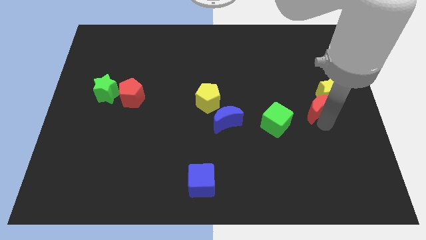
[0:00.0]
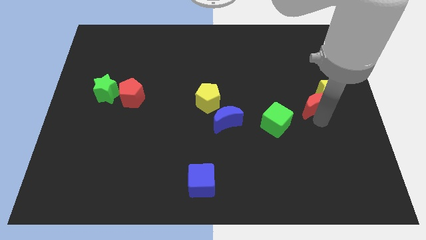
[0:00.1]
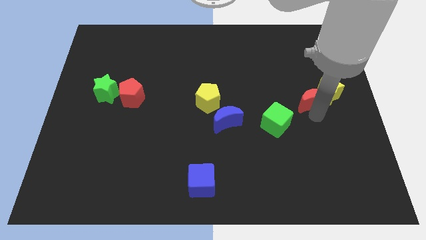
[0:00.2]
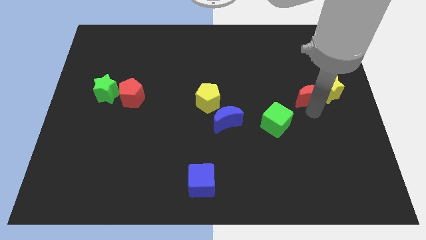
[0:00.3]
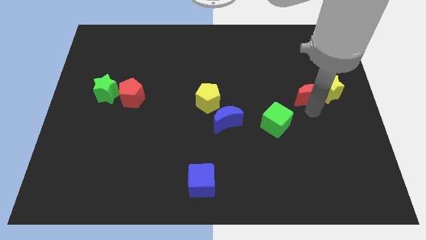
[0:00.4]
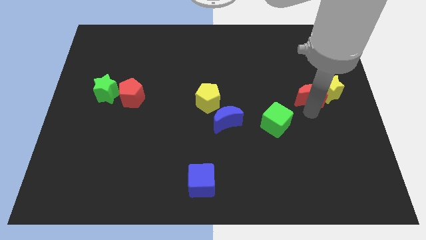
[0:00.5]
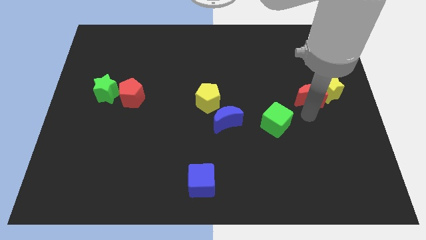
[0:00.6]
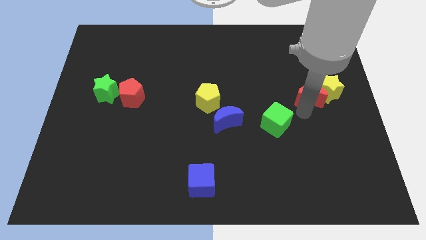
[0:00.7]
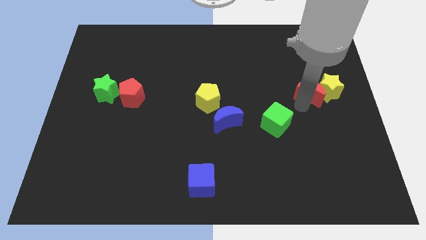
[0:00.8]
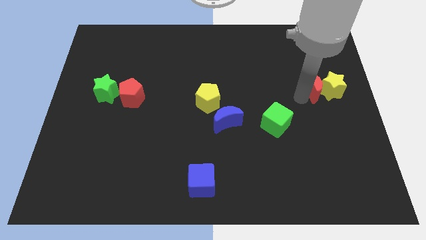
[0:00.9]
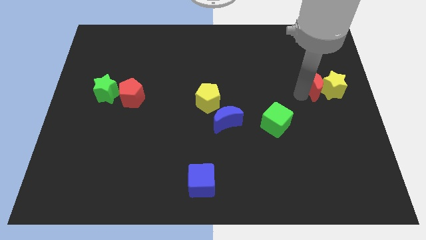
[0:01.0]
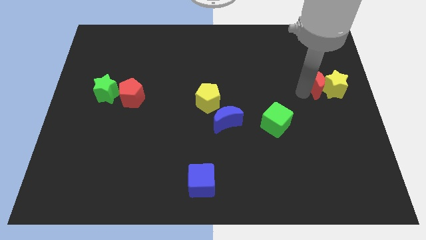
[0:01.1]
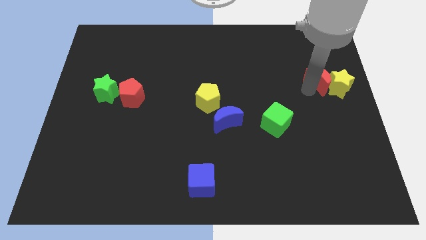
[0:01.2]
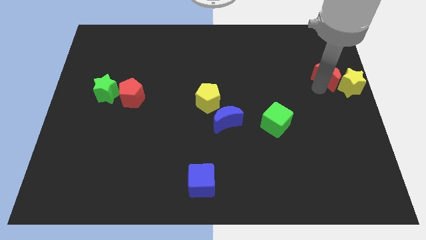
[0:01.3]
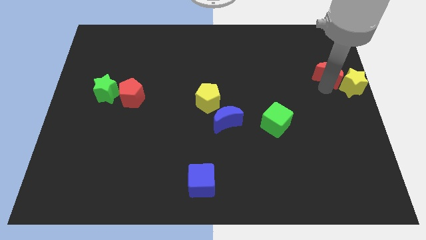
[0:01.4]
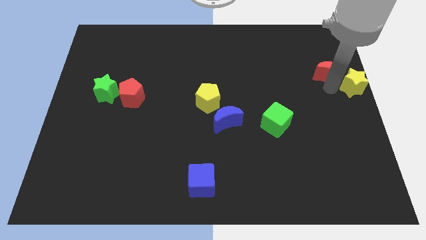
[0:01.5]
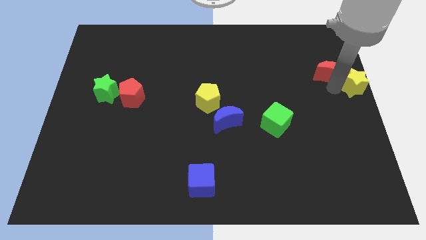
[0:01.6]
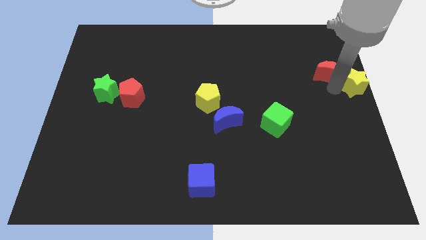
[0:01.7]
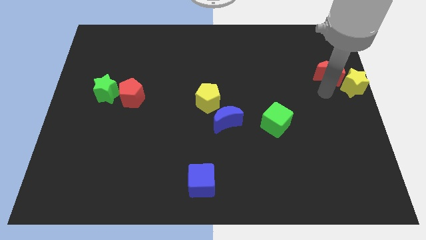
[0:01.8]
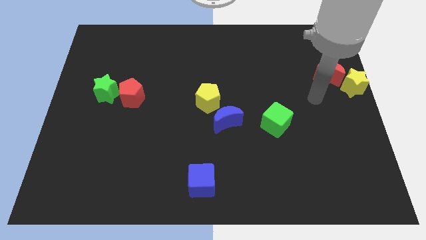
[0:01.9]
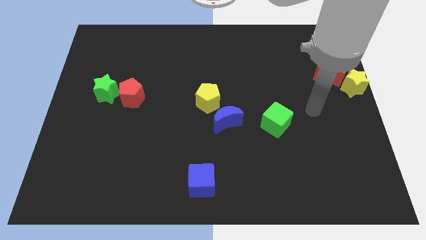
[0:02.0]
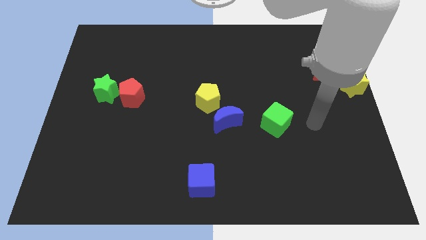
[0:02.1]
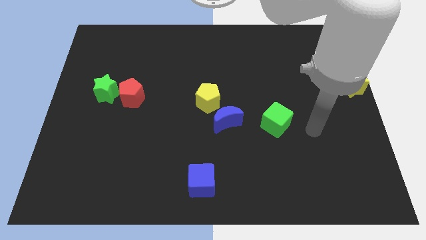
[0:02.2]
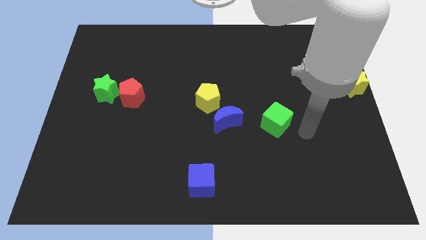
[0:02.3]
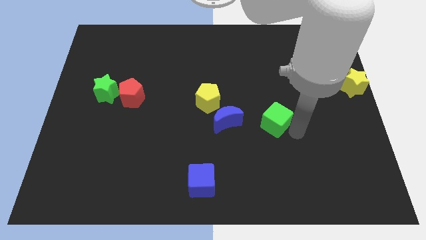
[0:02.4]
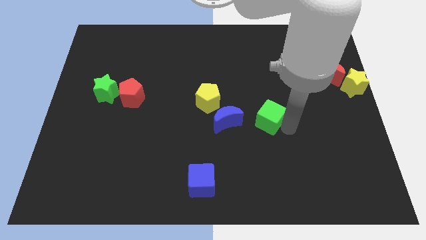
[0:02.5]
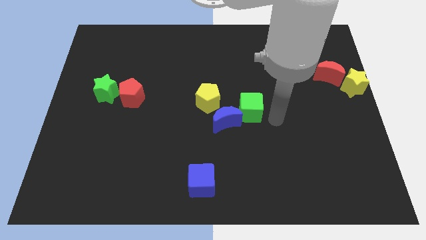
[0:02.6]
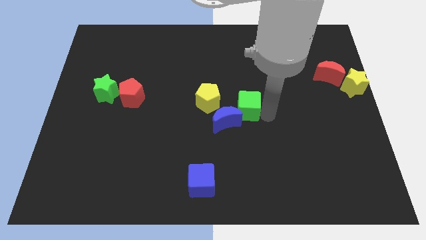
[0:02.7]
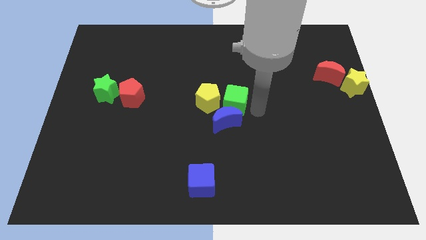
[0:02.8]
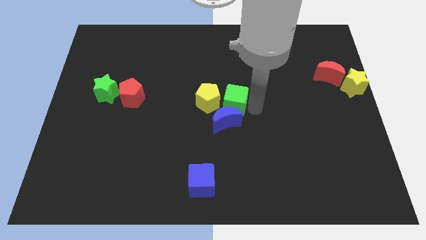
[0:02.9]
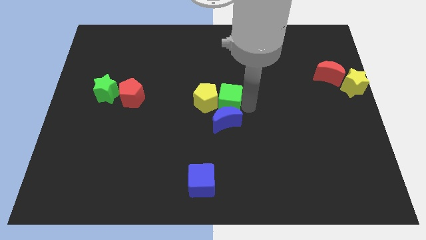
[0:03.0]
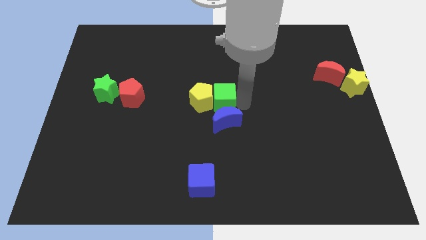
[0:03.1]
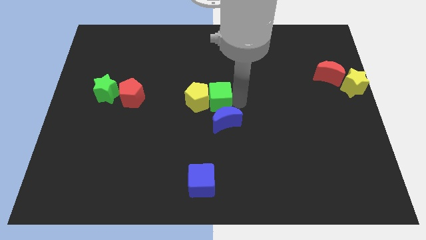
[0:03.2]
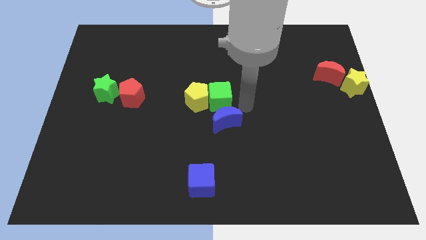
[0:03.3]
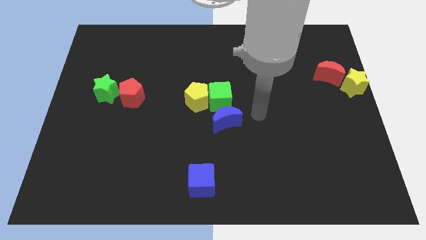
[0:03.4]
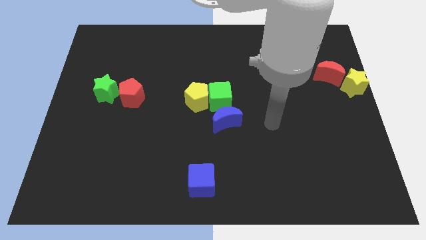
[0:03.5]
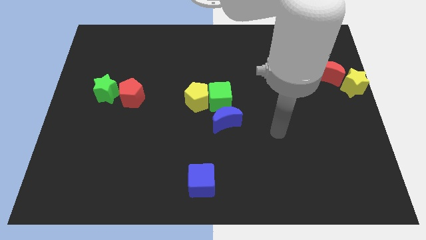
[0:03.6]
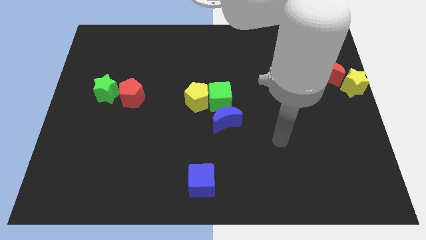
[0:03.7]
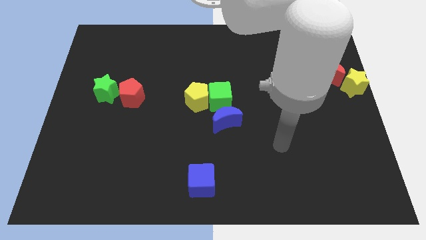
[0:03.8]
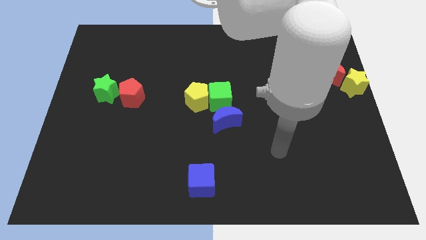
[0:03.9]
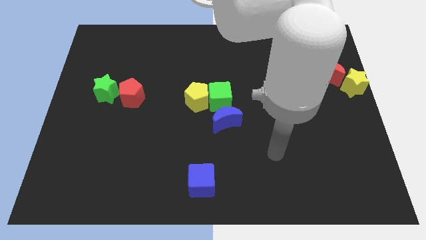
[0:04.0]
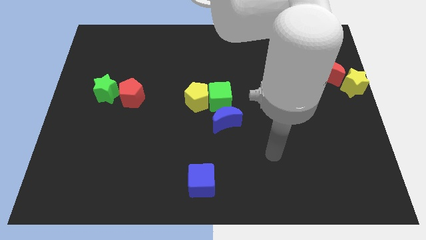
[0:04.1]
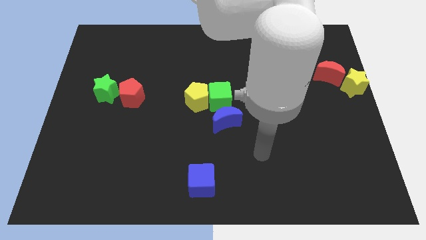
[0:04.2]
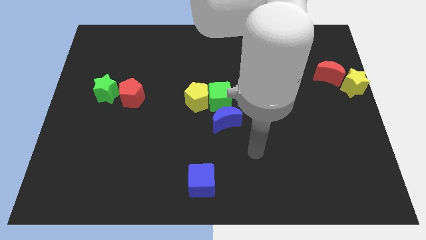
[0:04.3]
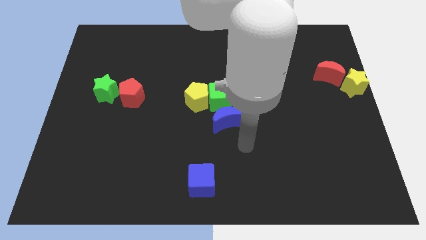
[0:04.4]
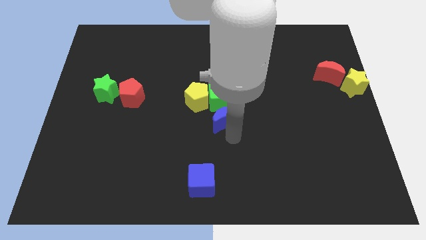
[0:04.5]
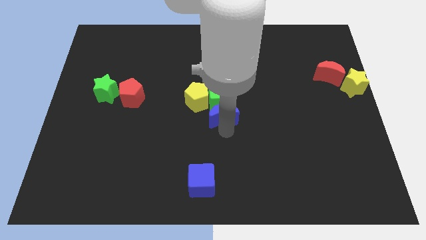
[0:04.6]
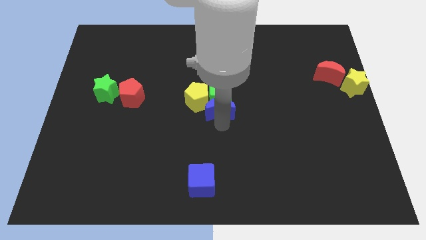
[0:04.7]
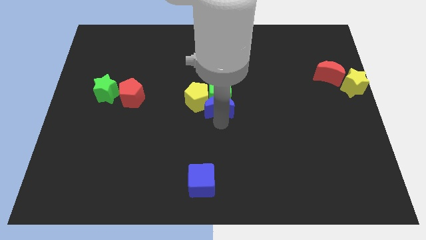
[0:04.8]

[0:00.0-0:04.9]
move the green cube into the yellow pentagon

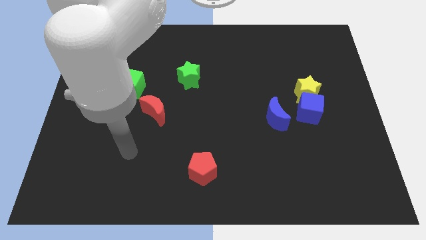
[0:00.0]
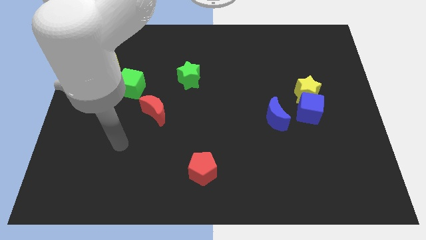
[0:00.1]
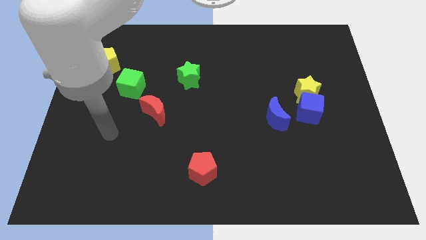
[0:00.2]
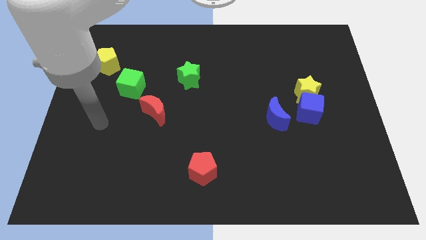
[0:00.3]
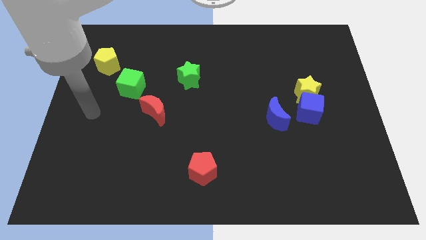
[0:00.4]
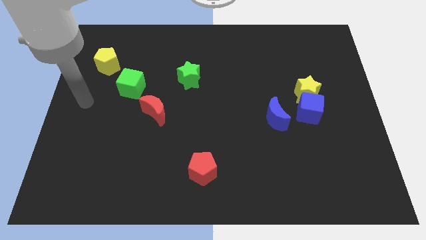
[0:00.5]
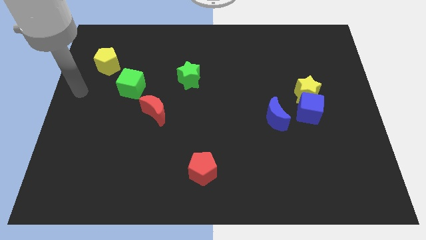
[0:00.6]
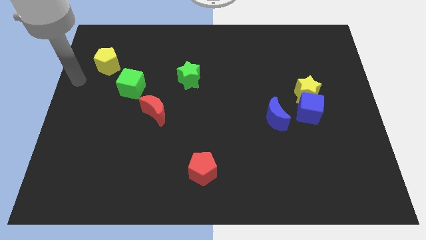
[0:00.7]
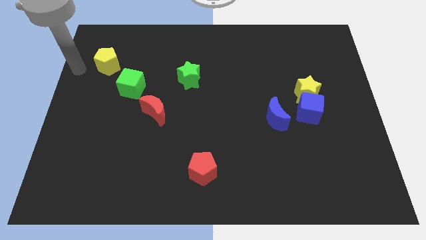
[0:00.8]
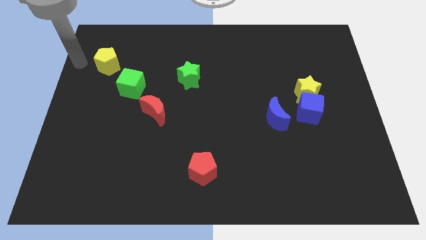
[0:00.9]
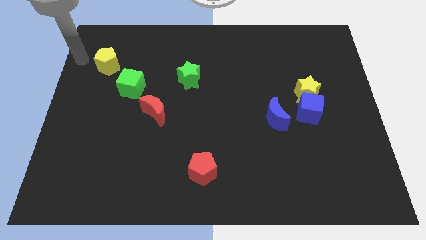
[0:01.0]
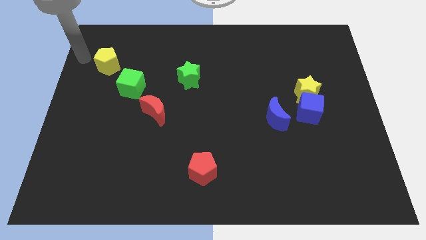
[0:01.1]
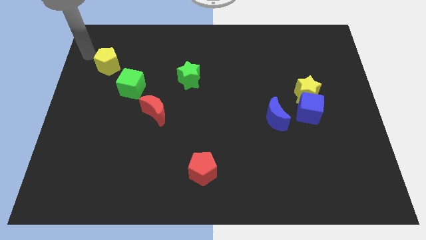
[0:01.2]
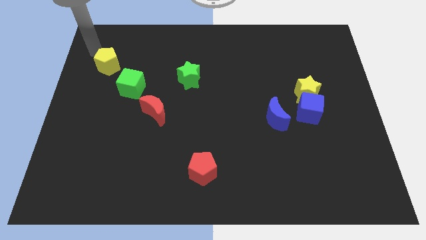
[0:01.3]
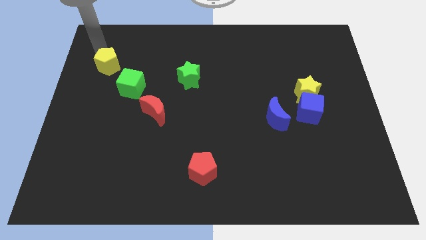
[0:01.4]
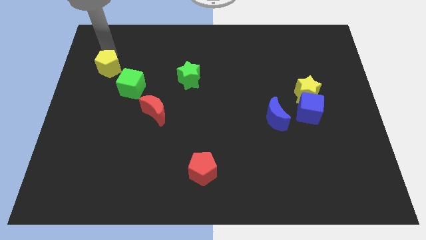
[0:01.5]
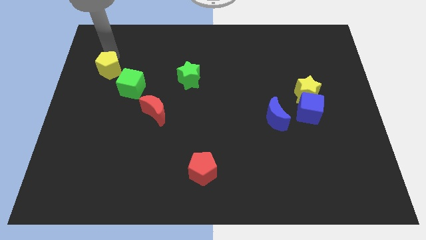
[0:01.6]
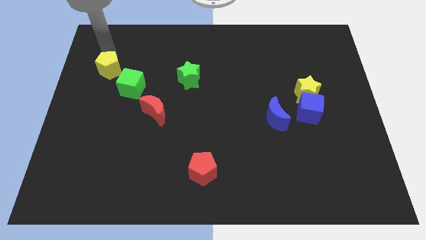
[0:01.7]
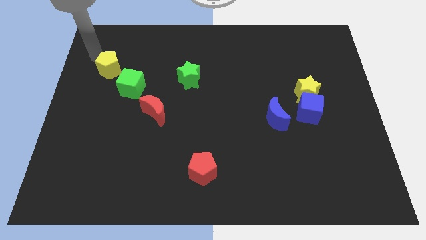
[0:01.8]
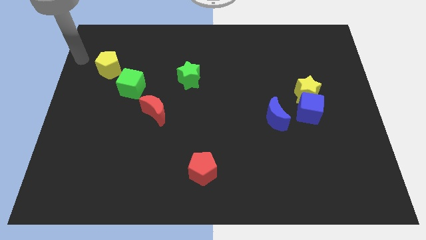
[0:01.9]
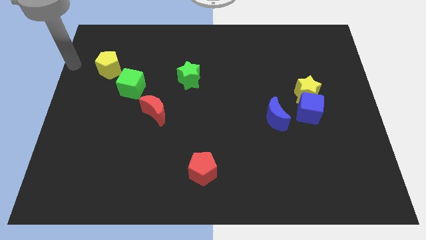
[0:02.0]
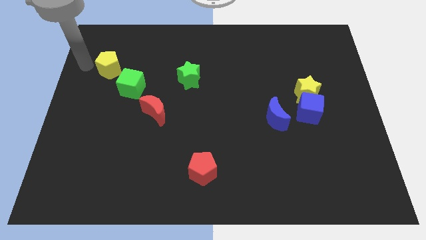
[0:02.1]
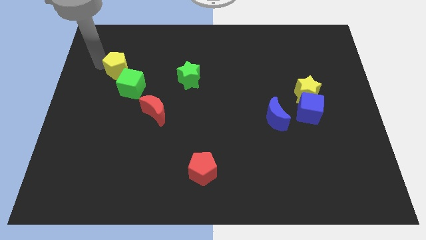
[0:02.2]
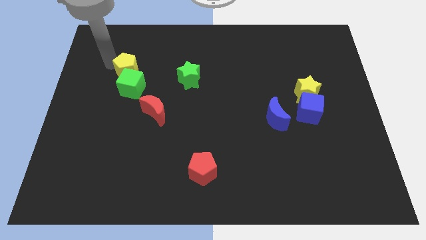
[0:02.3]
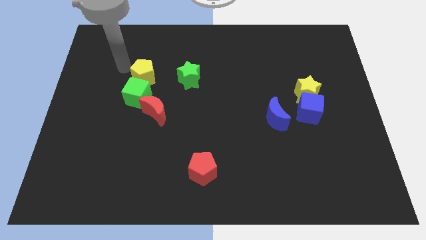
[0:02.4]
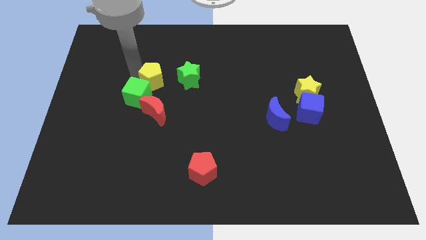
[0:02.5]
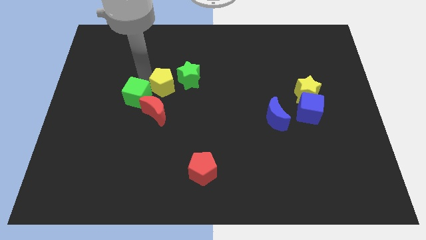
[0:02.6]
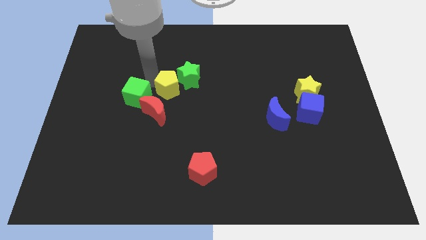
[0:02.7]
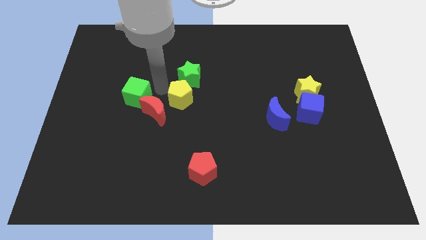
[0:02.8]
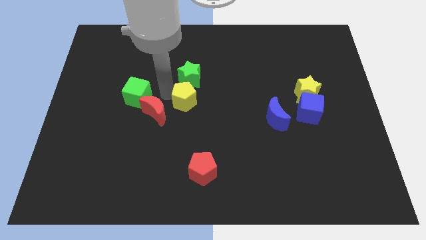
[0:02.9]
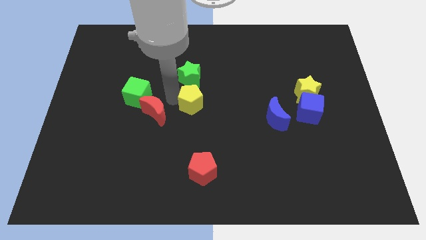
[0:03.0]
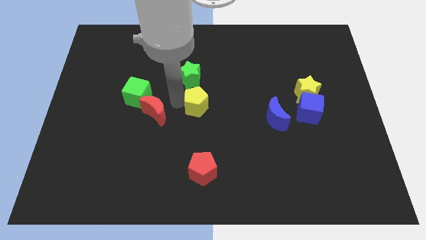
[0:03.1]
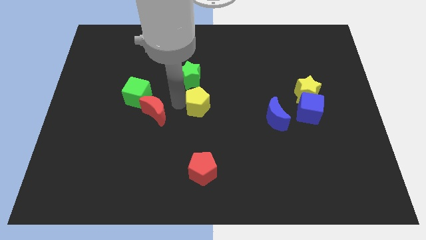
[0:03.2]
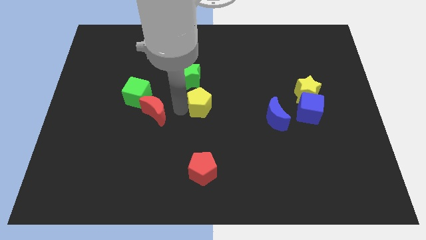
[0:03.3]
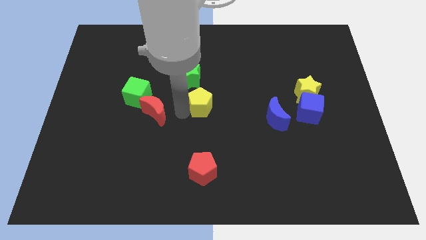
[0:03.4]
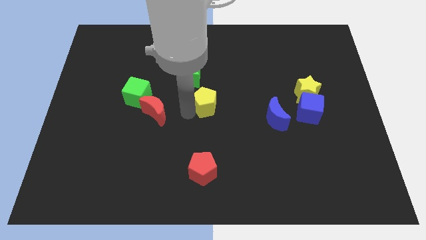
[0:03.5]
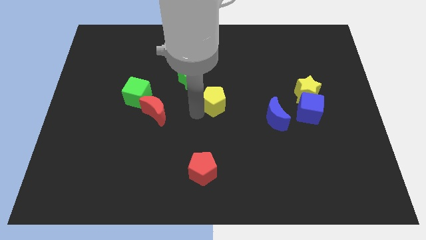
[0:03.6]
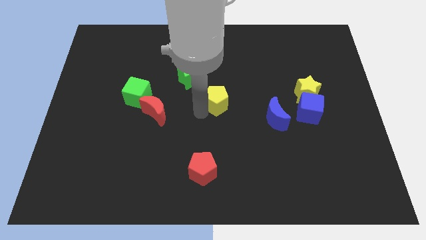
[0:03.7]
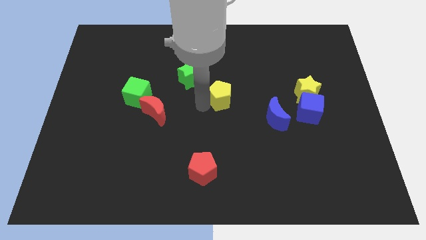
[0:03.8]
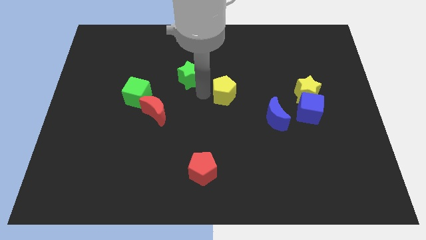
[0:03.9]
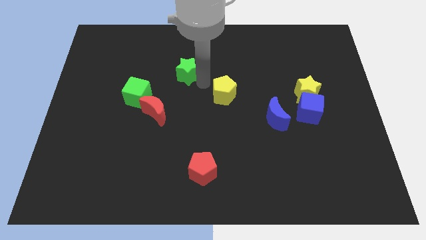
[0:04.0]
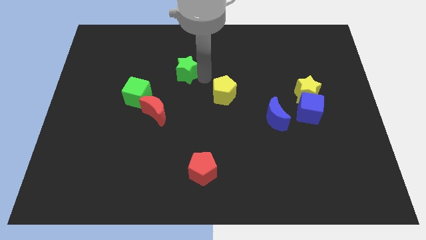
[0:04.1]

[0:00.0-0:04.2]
place yellow pentagon parallel to yellow star
